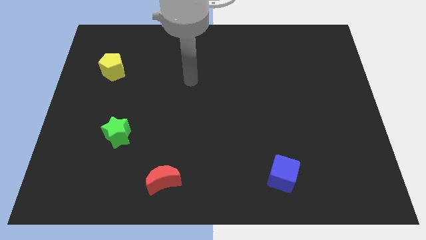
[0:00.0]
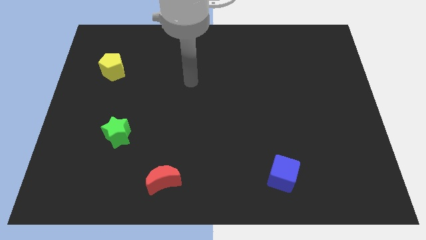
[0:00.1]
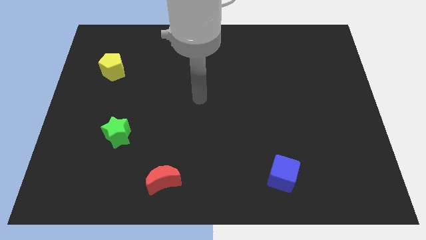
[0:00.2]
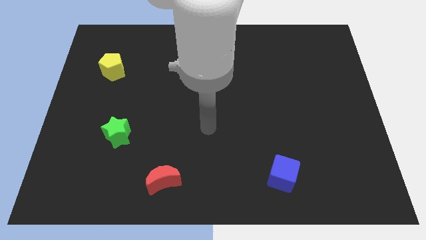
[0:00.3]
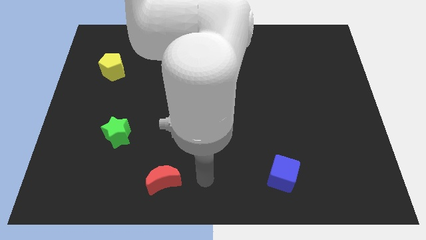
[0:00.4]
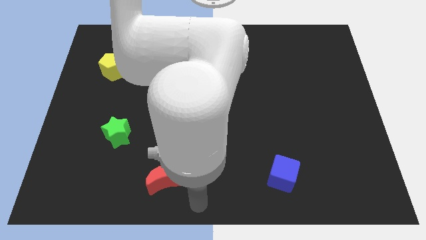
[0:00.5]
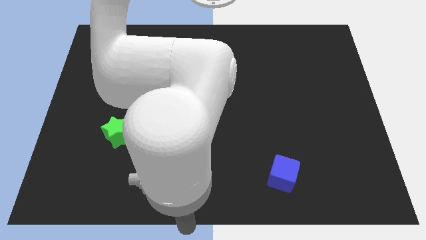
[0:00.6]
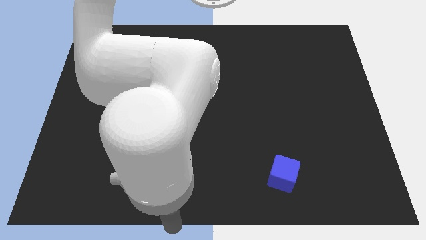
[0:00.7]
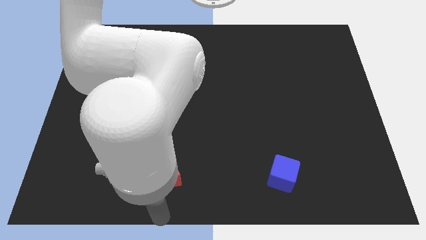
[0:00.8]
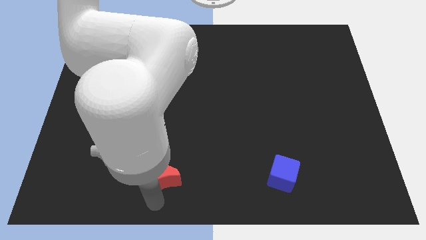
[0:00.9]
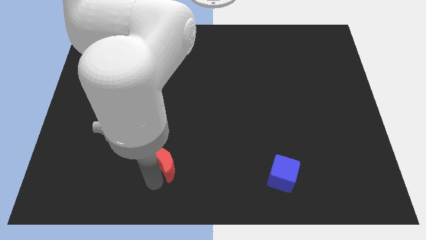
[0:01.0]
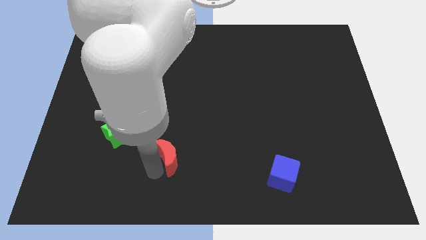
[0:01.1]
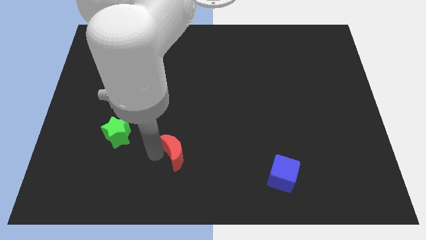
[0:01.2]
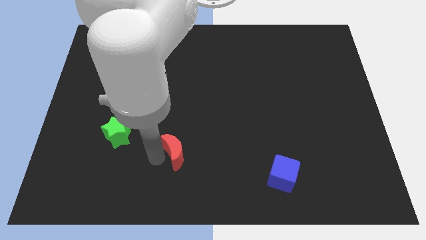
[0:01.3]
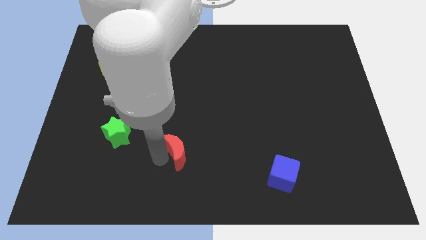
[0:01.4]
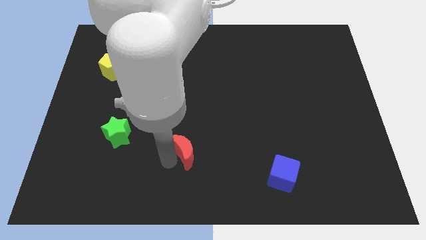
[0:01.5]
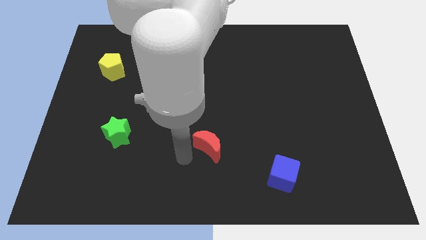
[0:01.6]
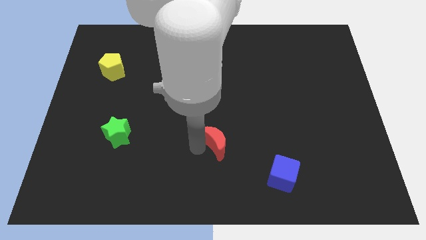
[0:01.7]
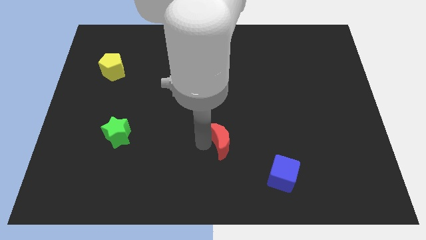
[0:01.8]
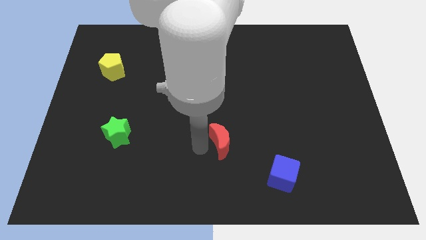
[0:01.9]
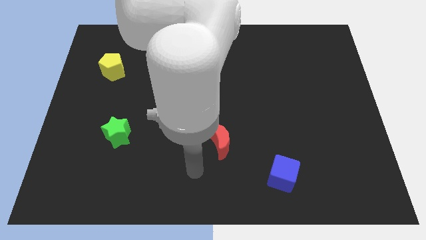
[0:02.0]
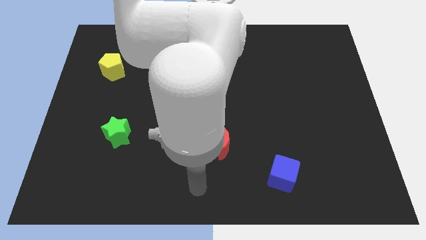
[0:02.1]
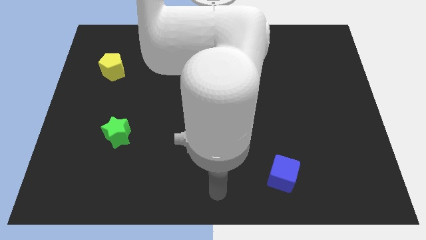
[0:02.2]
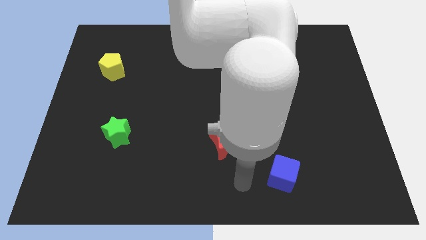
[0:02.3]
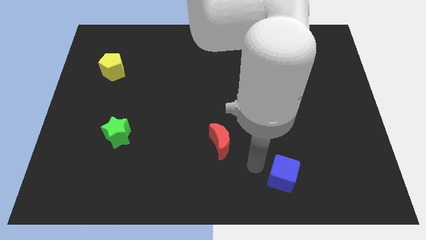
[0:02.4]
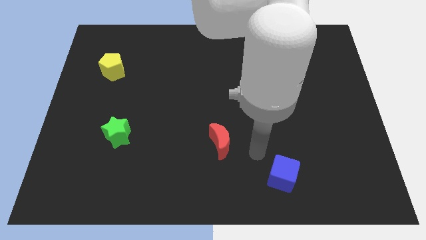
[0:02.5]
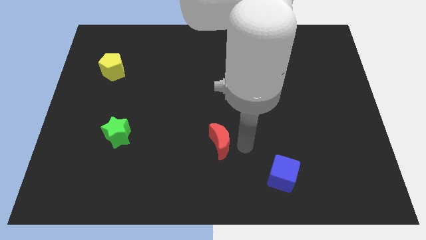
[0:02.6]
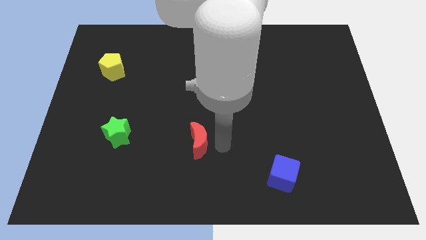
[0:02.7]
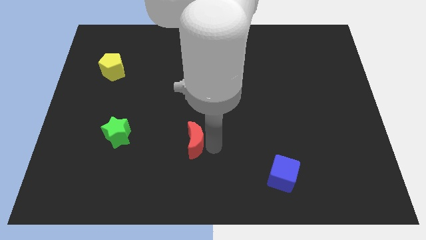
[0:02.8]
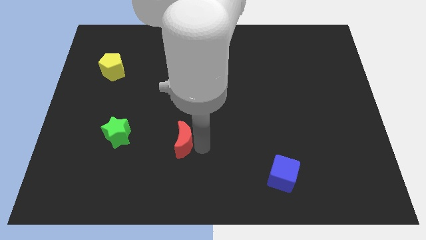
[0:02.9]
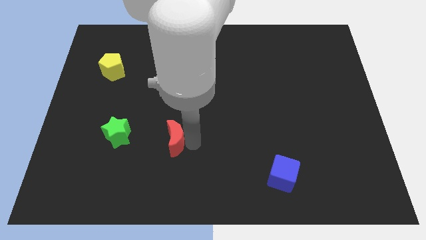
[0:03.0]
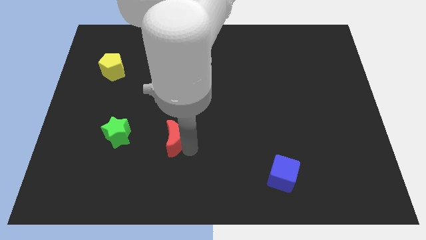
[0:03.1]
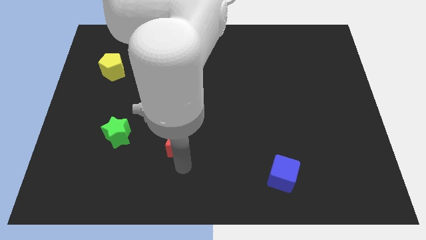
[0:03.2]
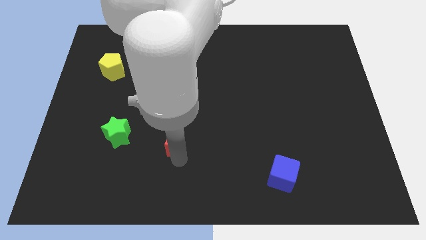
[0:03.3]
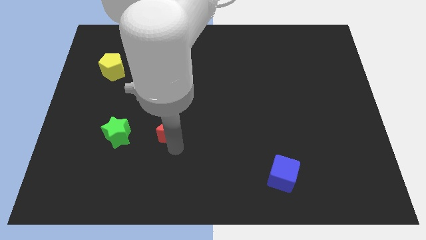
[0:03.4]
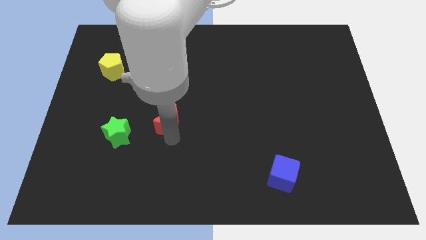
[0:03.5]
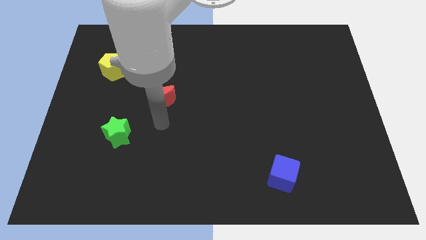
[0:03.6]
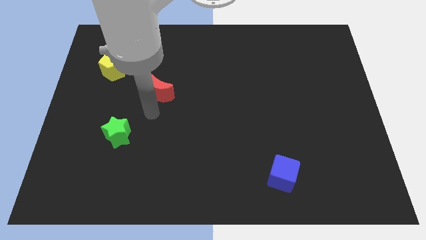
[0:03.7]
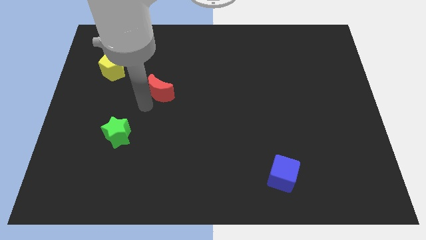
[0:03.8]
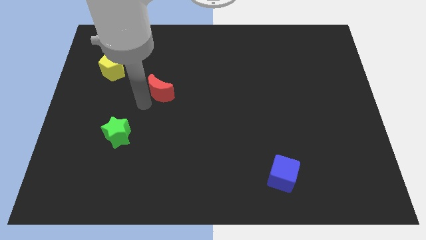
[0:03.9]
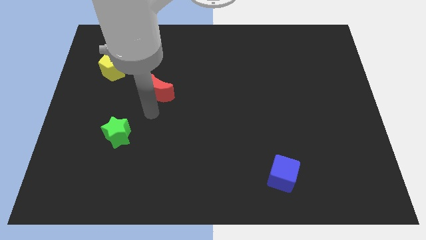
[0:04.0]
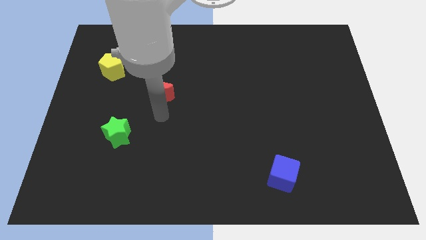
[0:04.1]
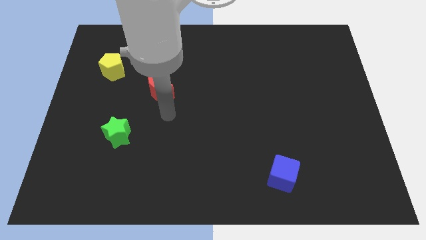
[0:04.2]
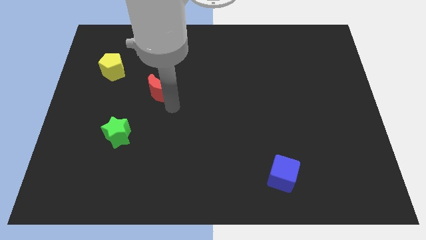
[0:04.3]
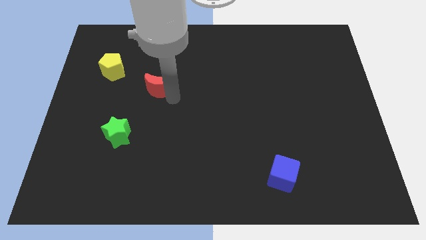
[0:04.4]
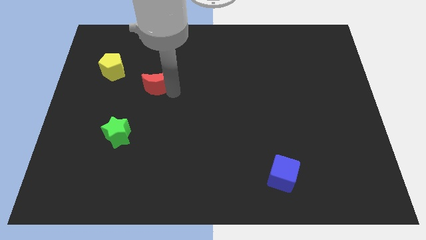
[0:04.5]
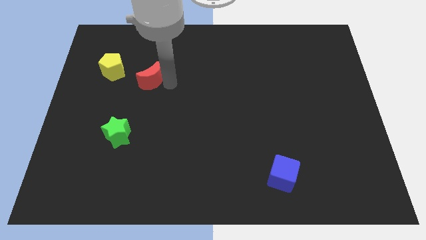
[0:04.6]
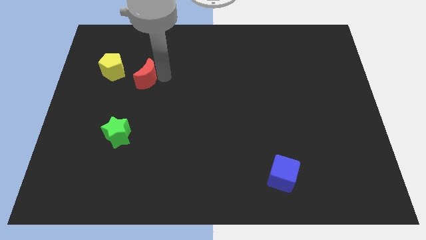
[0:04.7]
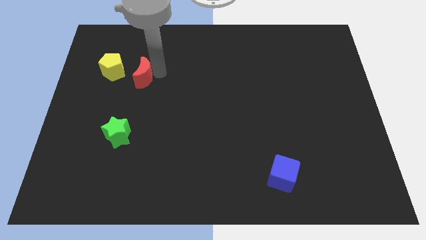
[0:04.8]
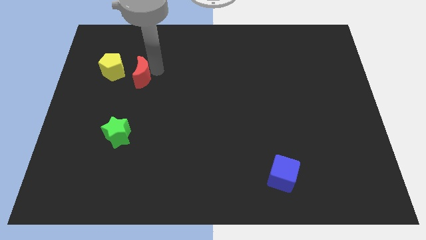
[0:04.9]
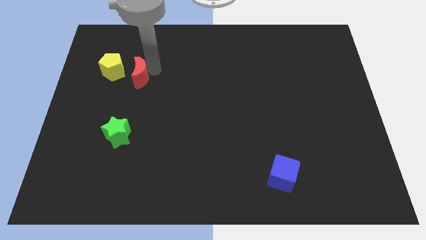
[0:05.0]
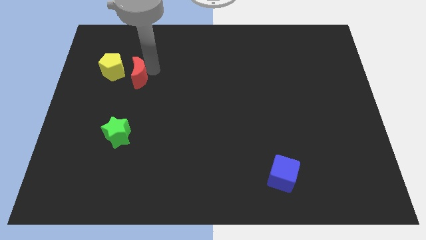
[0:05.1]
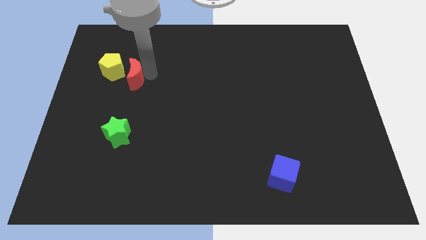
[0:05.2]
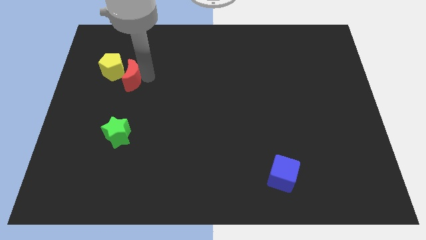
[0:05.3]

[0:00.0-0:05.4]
push the red moon towards the yellow pentagon

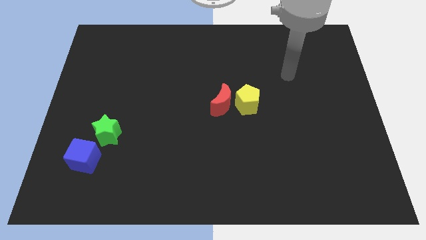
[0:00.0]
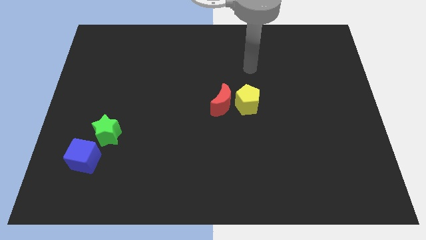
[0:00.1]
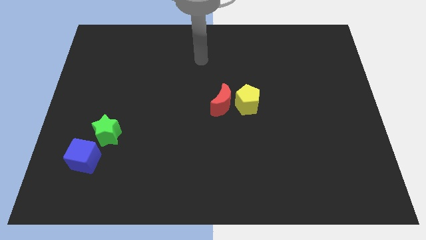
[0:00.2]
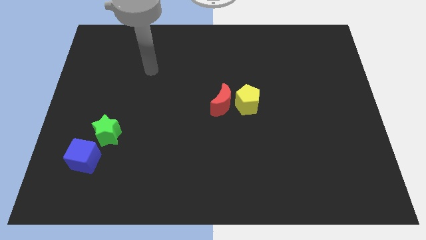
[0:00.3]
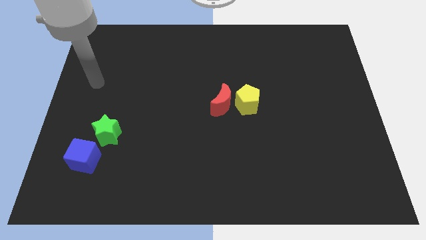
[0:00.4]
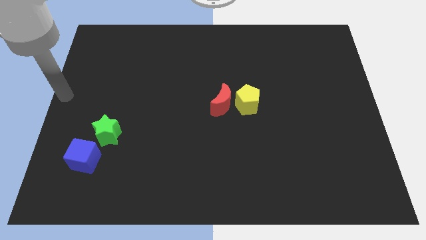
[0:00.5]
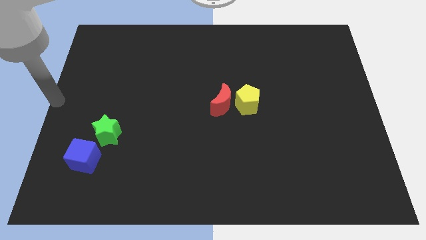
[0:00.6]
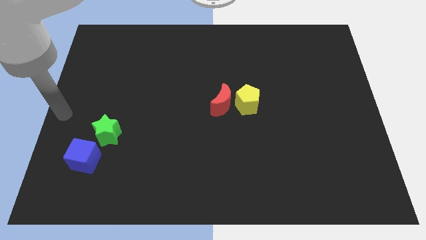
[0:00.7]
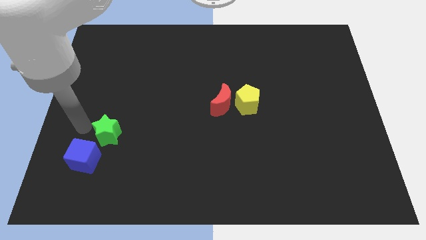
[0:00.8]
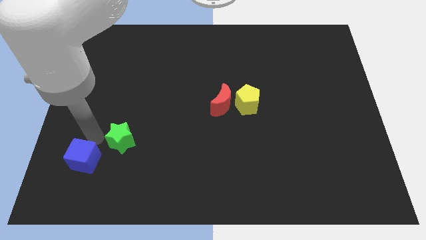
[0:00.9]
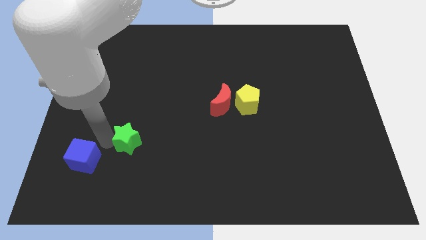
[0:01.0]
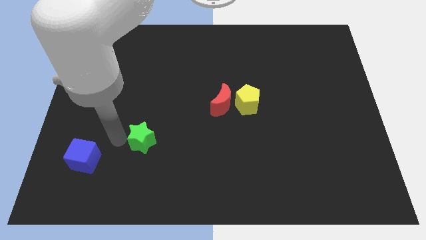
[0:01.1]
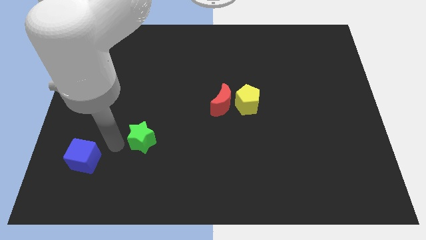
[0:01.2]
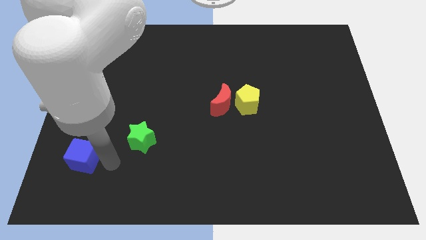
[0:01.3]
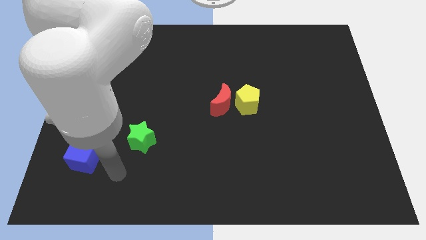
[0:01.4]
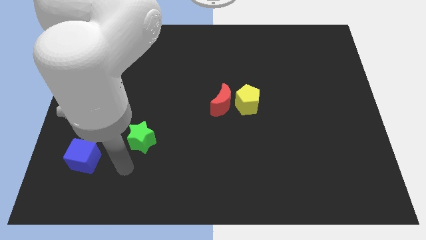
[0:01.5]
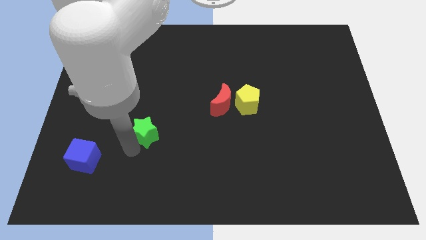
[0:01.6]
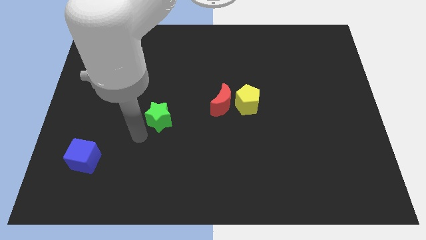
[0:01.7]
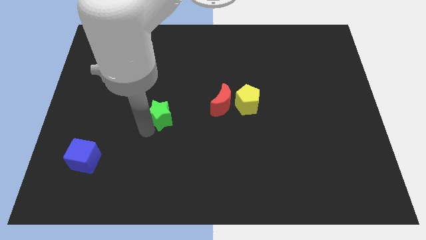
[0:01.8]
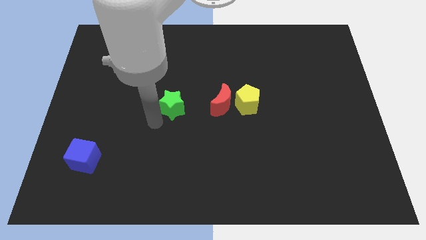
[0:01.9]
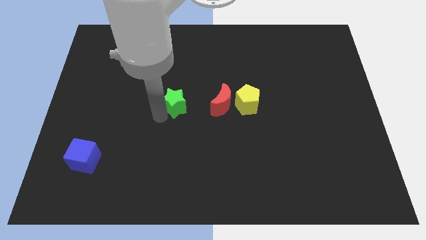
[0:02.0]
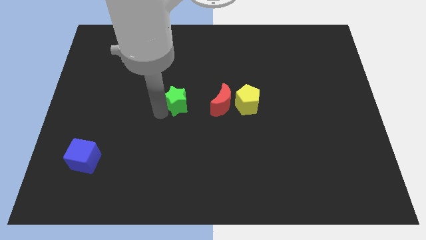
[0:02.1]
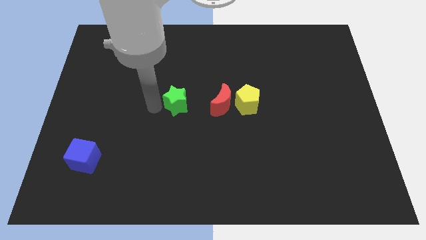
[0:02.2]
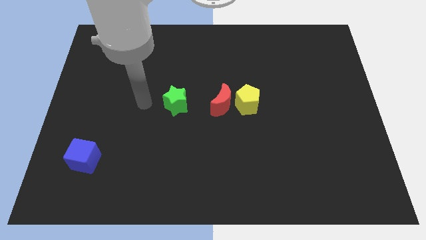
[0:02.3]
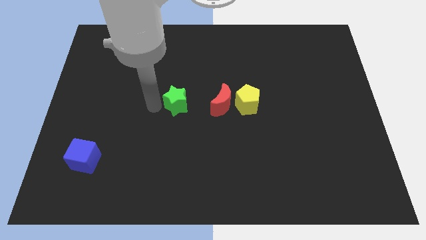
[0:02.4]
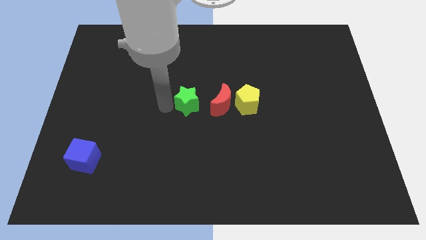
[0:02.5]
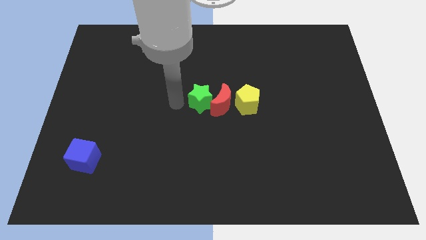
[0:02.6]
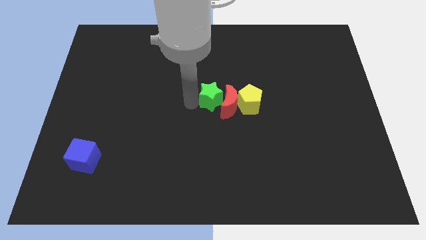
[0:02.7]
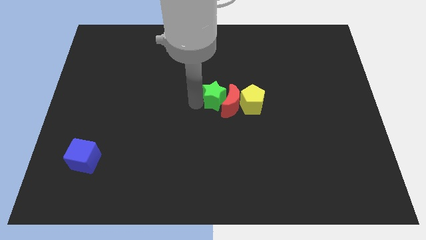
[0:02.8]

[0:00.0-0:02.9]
slide the star next to the red block

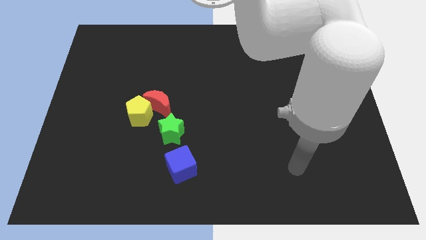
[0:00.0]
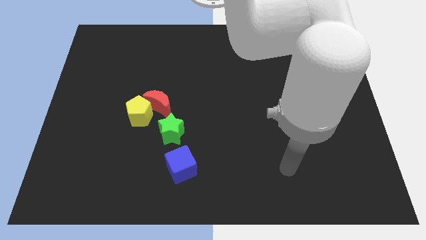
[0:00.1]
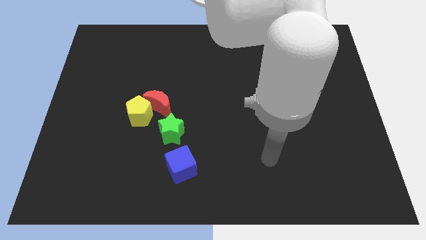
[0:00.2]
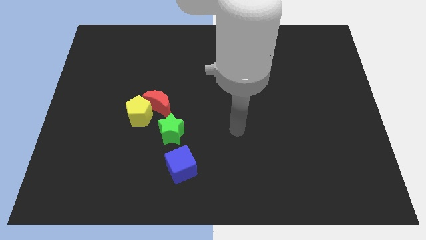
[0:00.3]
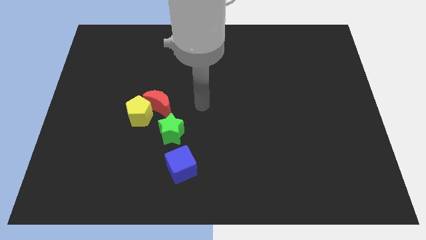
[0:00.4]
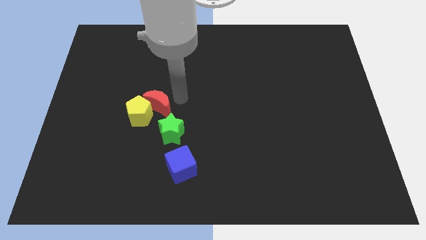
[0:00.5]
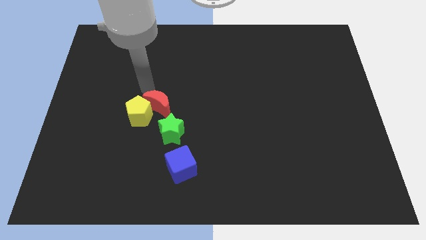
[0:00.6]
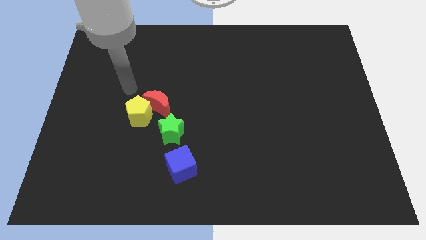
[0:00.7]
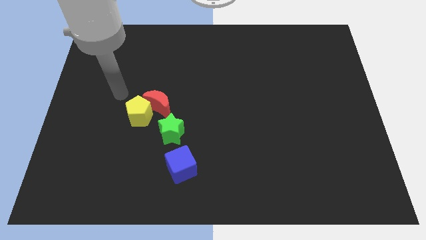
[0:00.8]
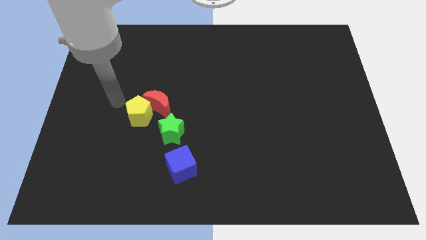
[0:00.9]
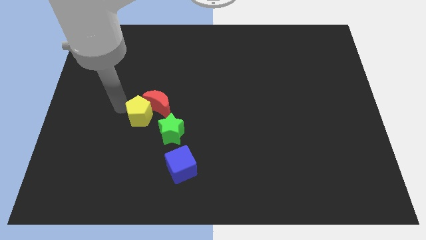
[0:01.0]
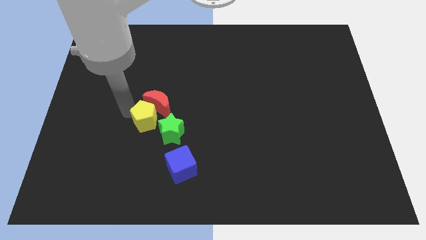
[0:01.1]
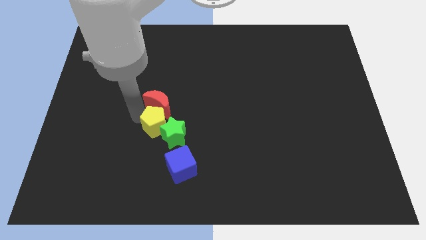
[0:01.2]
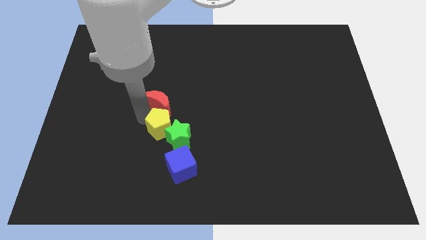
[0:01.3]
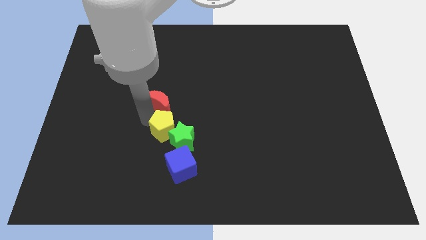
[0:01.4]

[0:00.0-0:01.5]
slide the pentagon next to the green block
